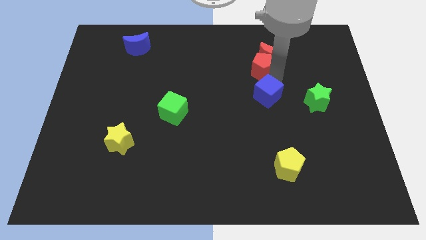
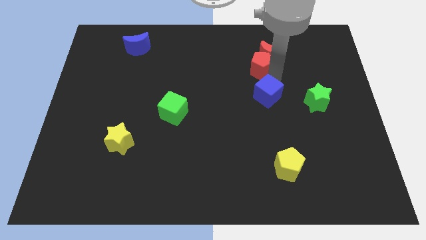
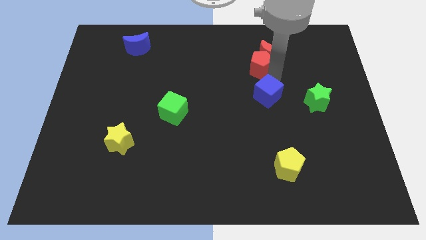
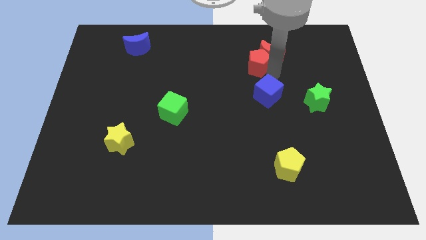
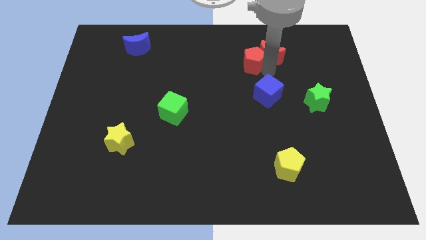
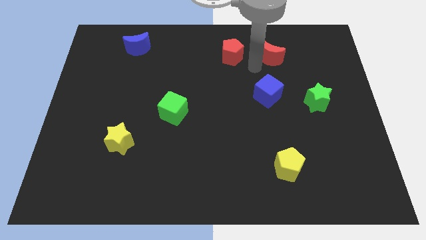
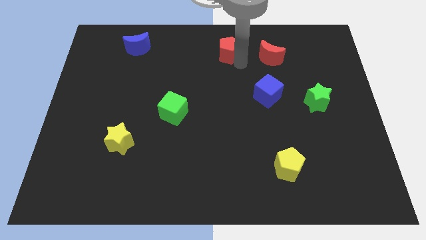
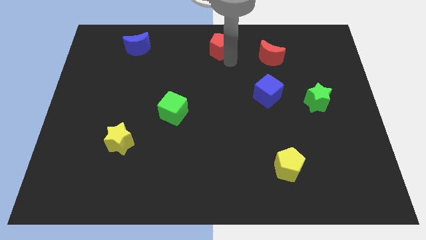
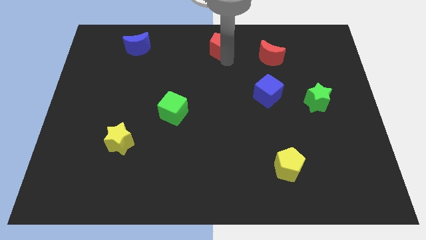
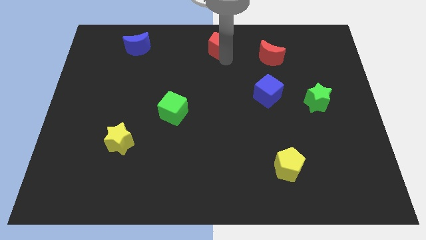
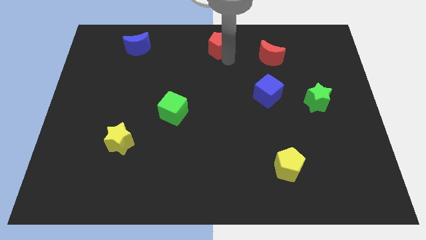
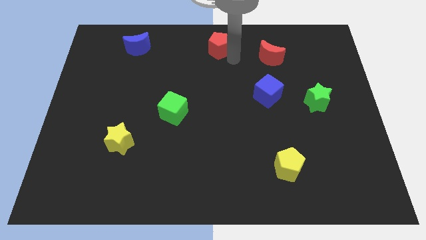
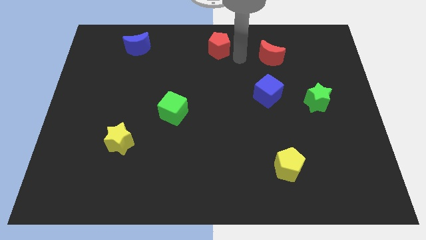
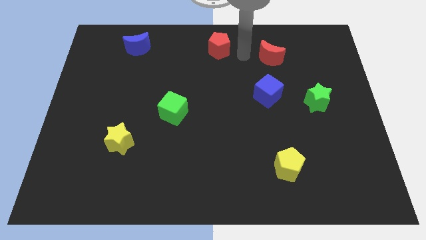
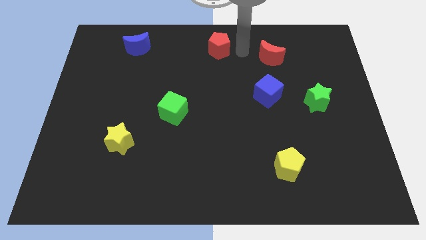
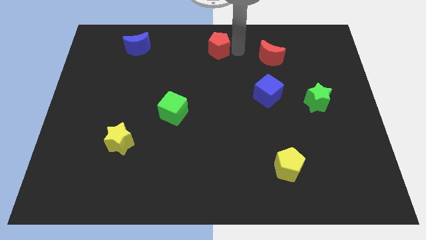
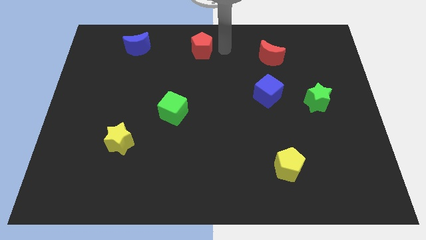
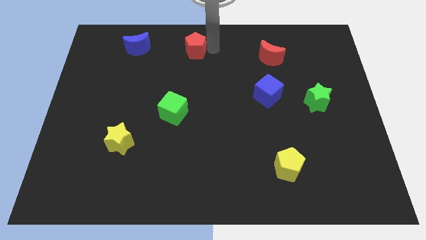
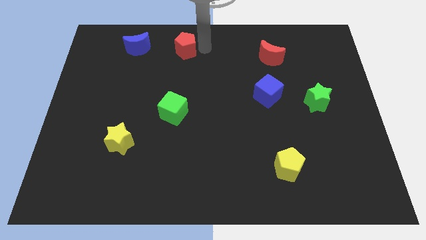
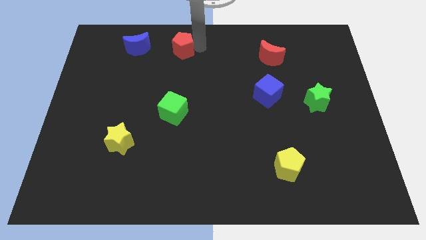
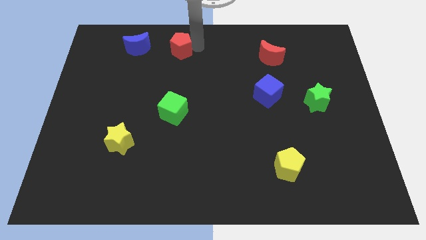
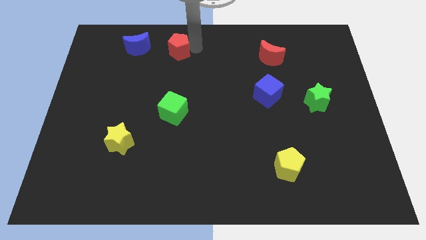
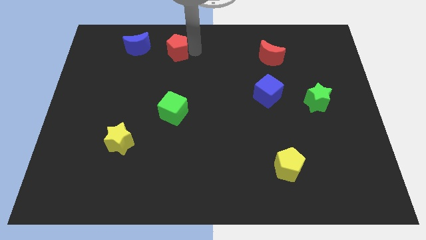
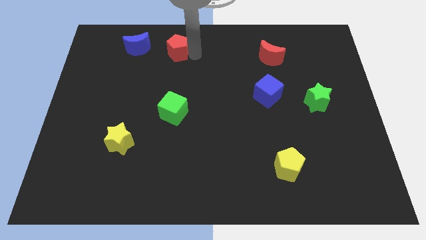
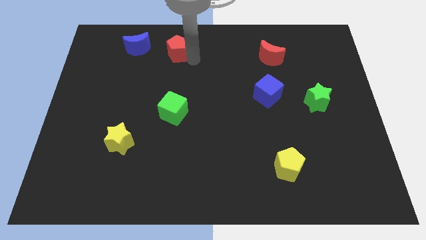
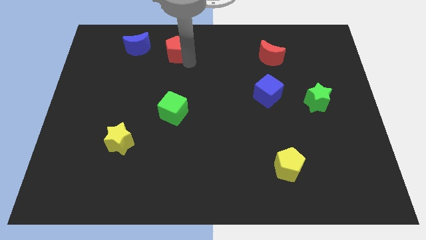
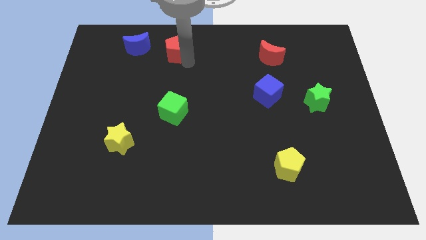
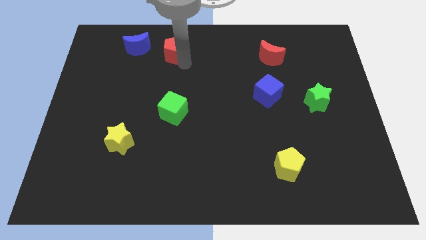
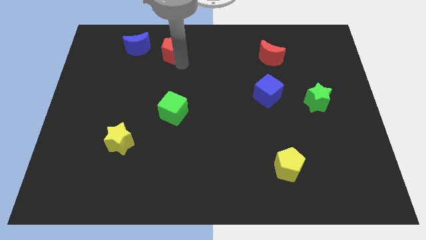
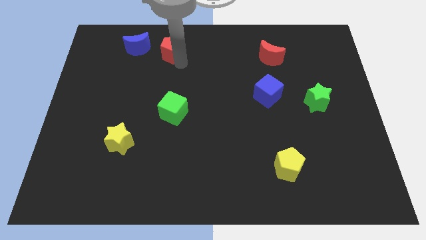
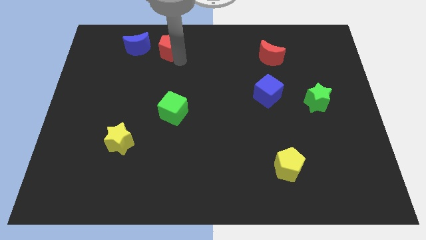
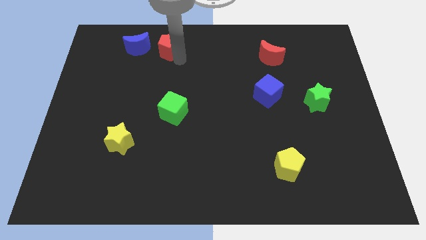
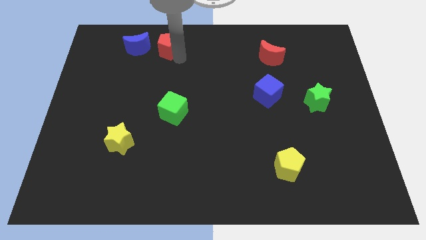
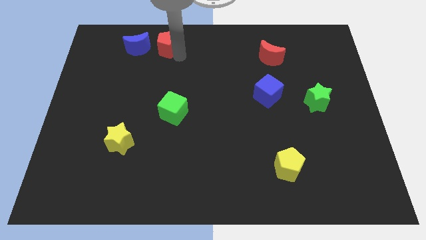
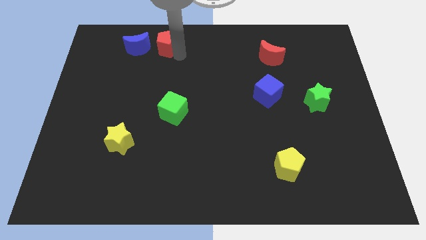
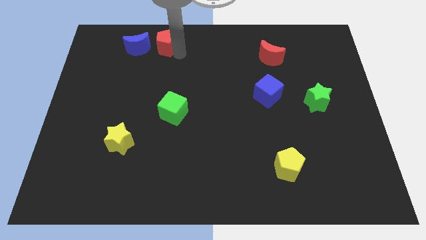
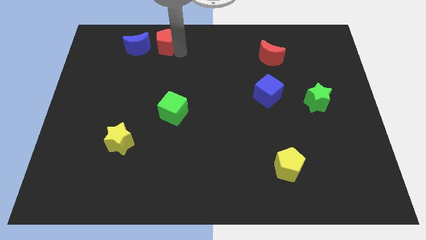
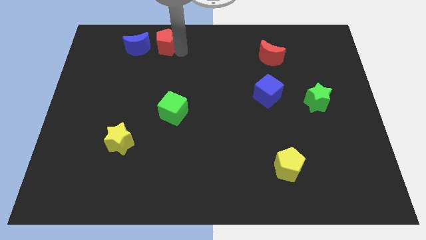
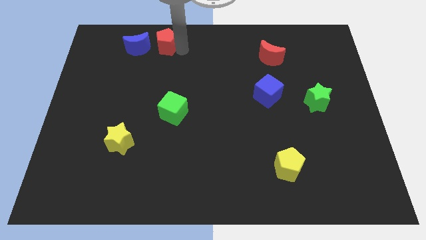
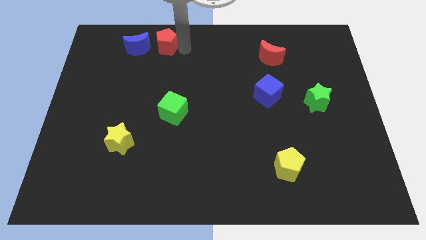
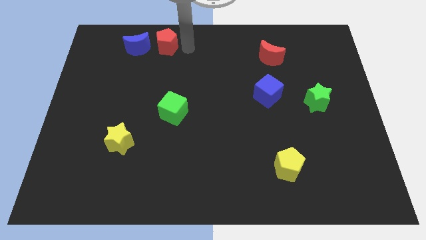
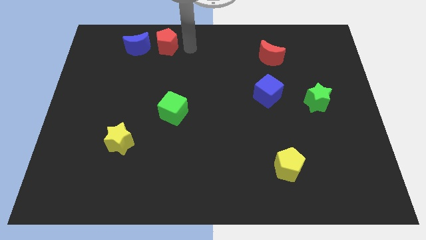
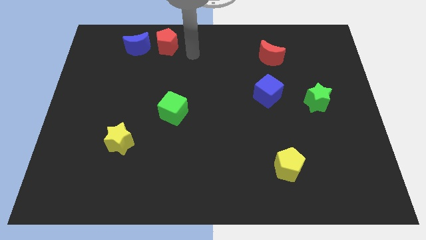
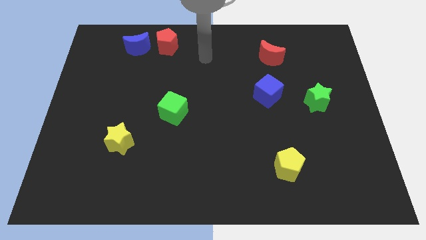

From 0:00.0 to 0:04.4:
place red pentagon to the right of blue crescent

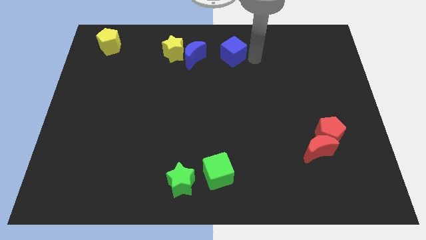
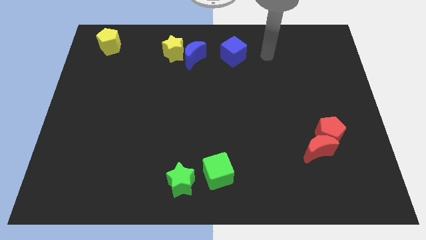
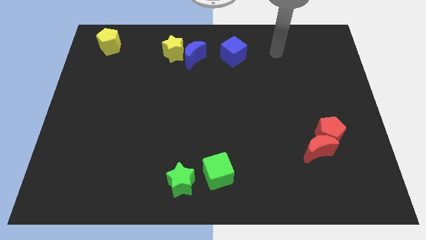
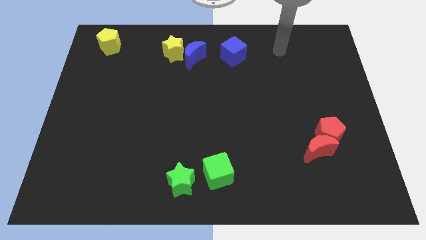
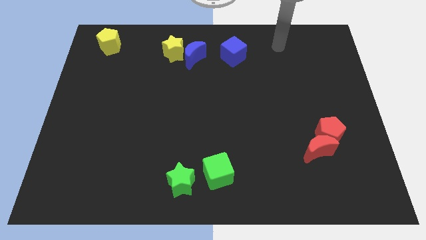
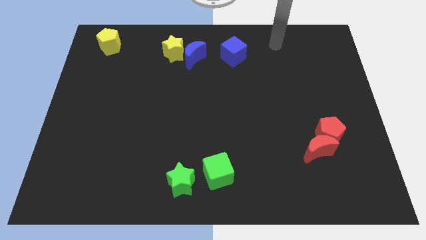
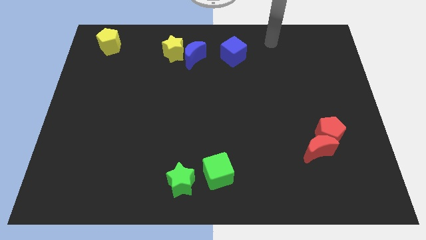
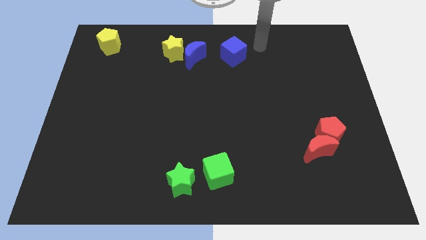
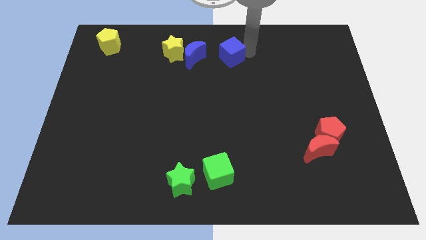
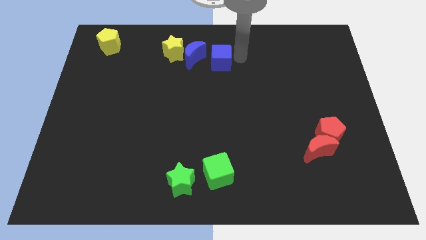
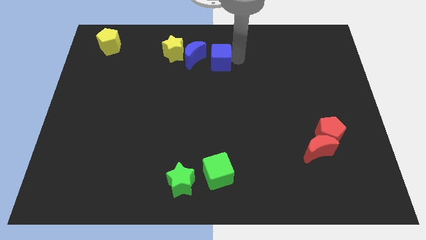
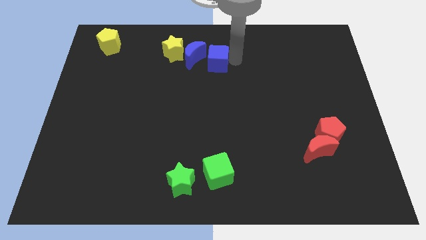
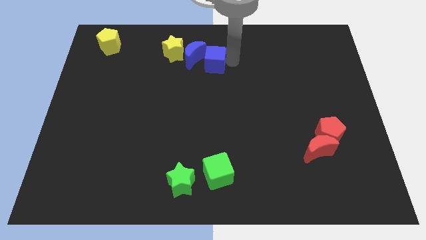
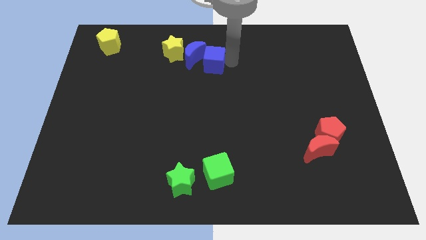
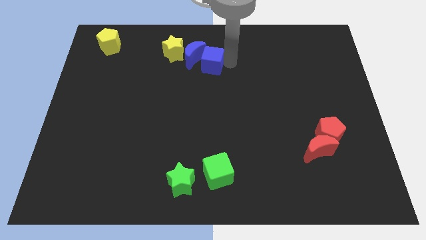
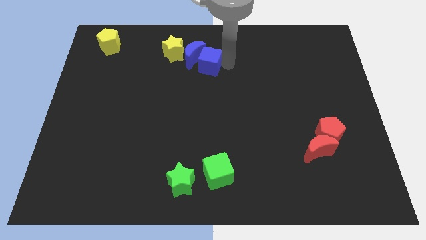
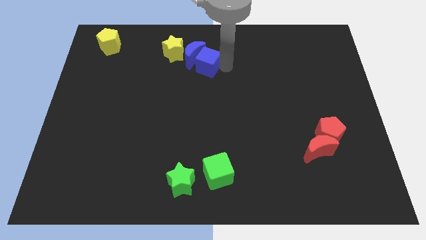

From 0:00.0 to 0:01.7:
place the blue cube to the right of the blue moon

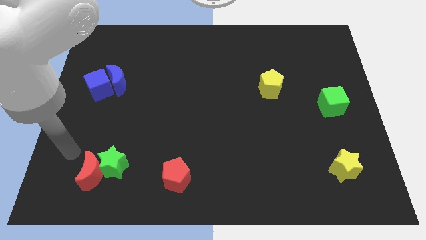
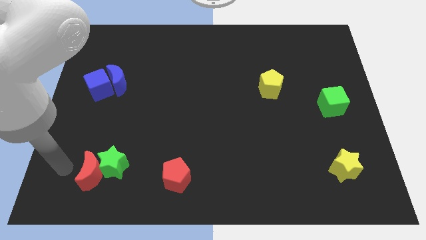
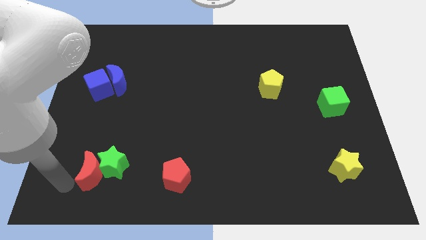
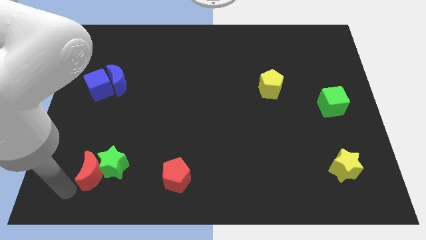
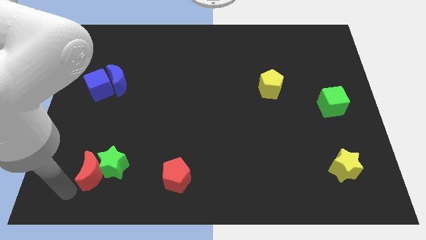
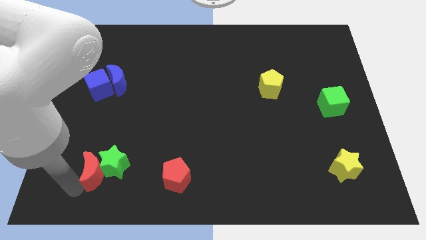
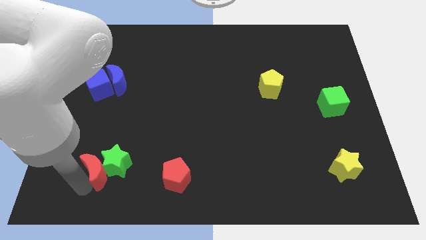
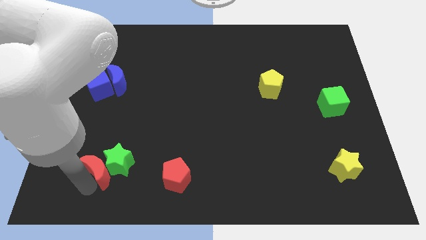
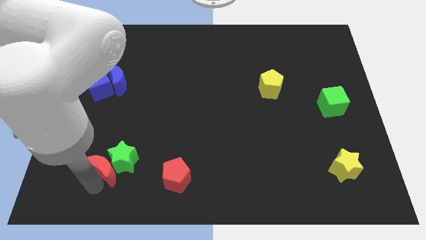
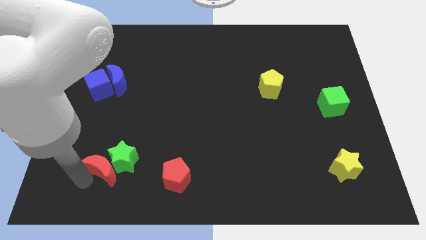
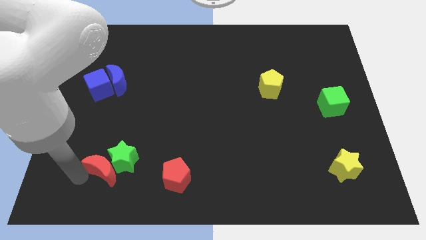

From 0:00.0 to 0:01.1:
push the red crescent into the green star

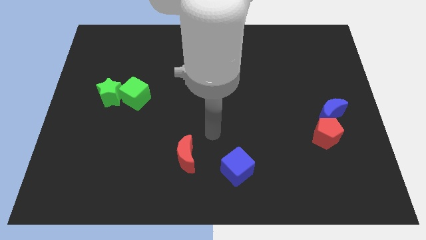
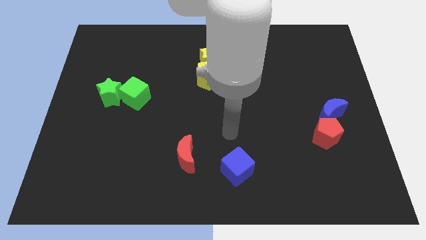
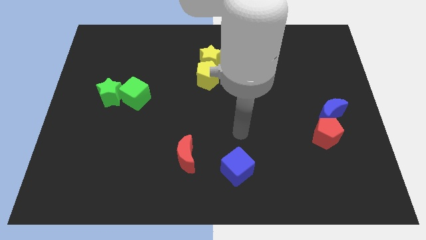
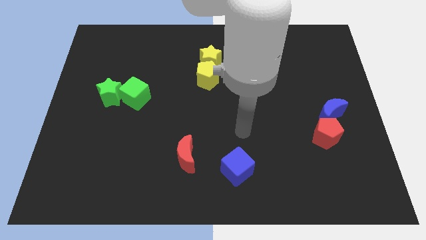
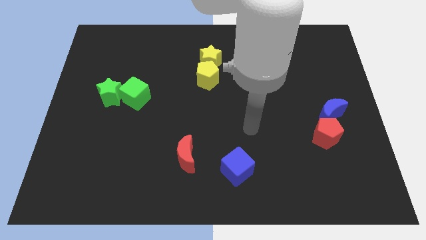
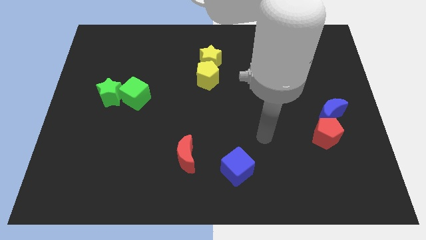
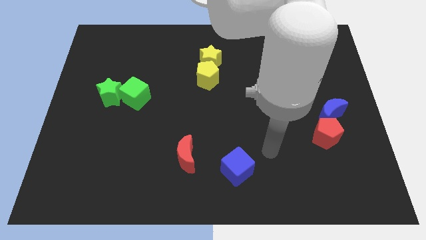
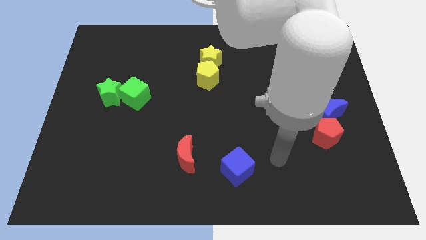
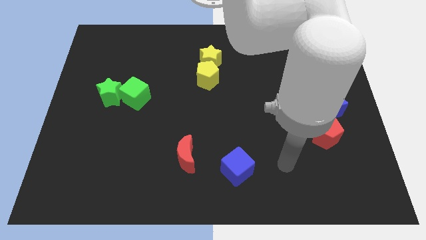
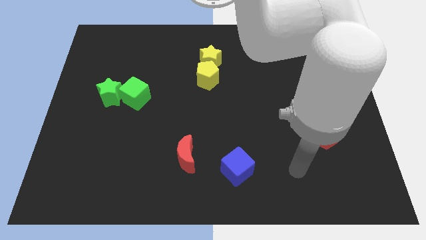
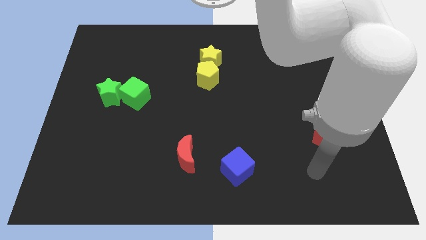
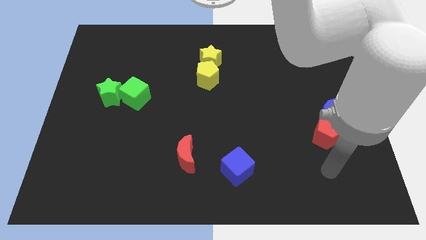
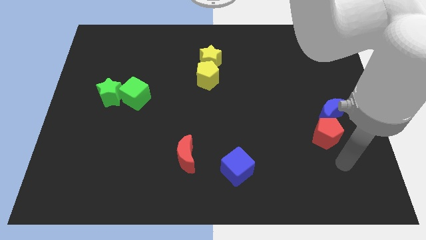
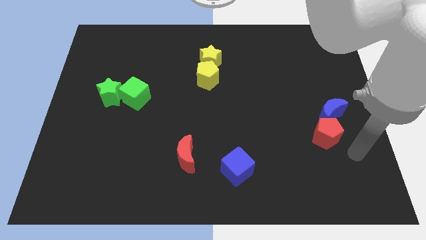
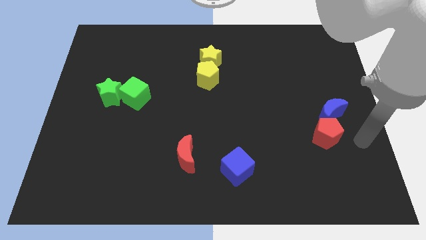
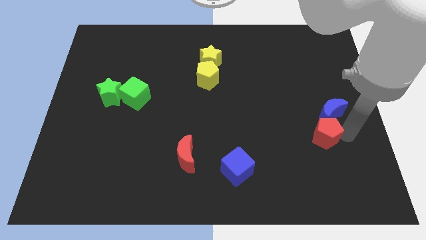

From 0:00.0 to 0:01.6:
place the arm to the right of the red pentagon

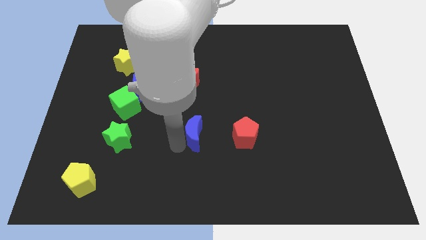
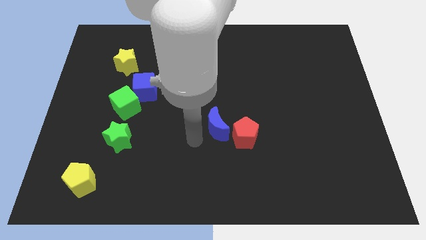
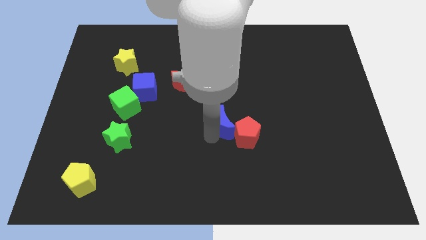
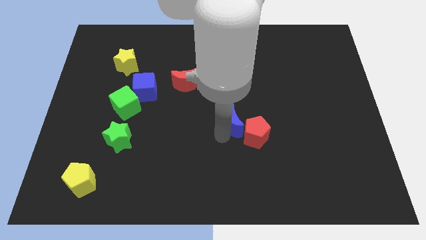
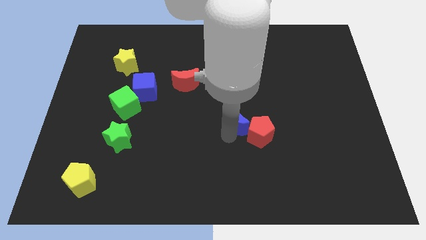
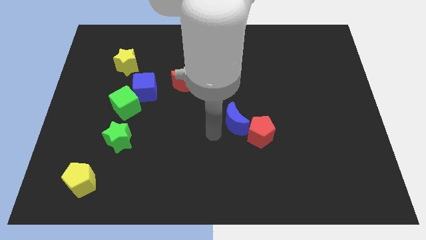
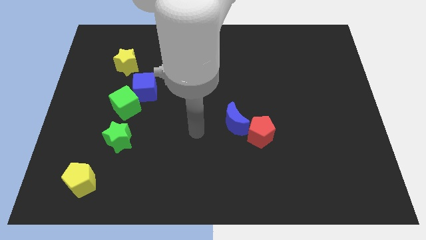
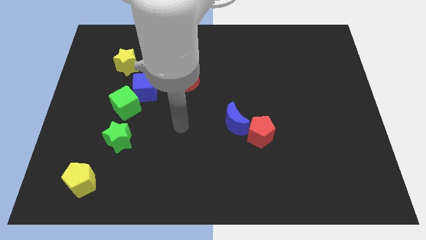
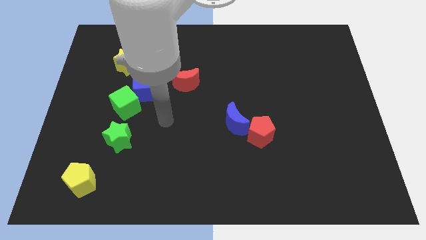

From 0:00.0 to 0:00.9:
push the blue moon into the red pentagon
